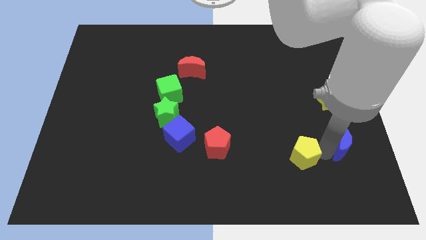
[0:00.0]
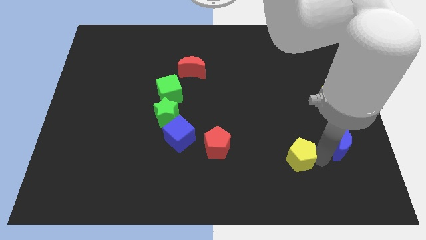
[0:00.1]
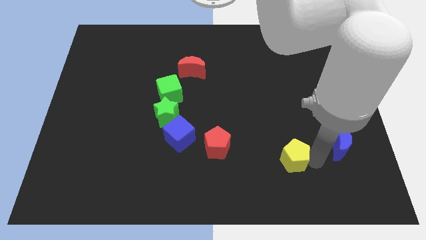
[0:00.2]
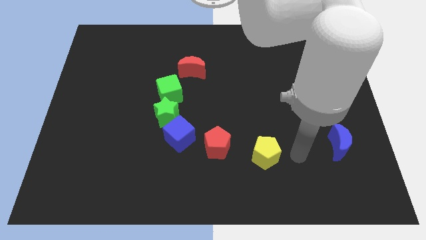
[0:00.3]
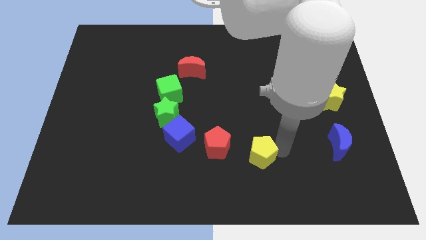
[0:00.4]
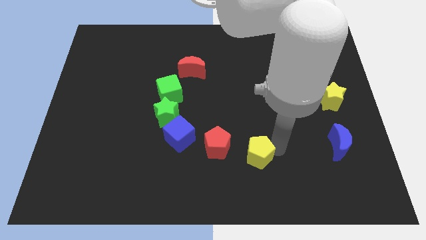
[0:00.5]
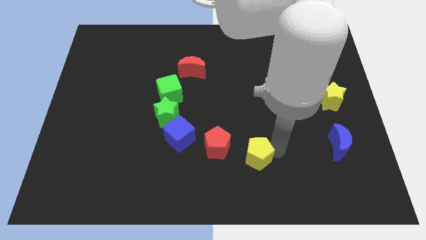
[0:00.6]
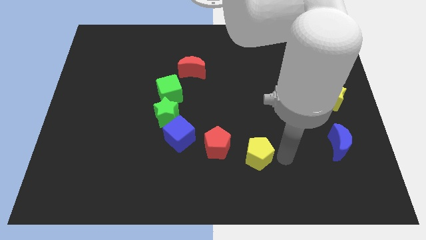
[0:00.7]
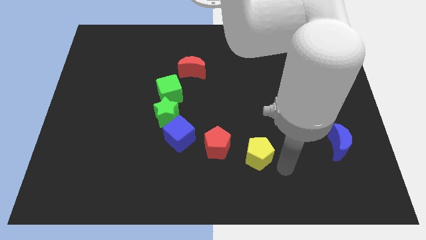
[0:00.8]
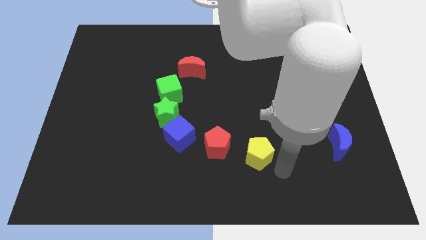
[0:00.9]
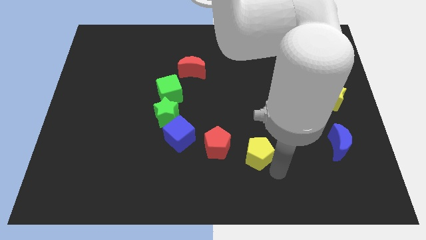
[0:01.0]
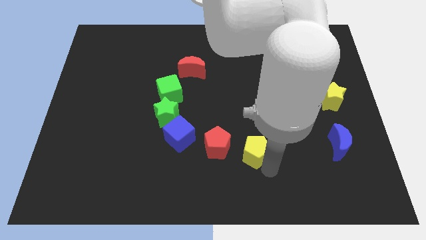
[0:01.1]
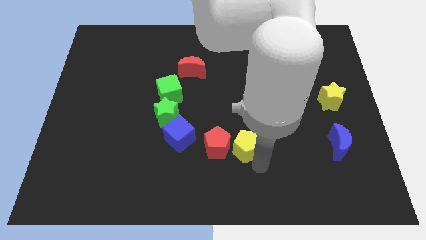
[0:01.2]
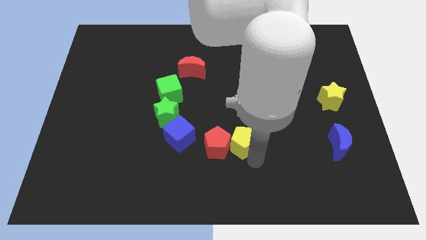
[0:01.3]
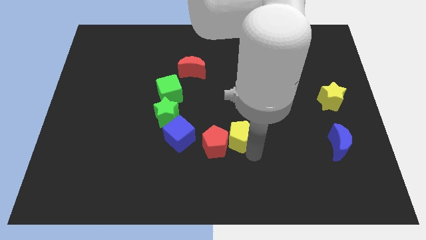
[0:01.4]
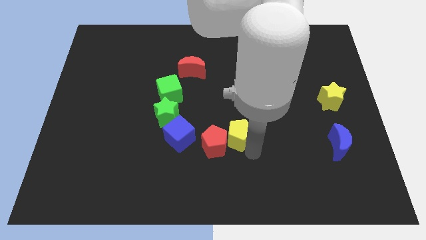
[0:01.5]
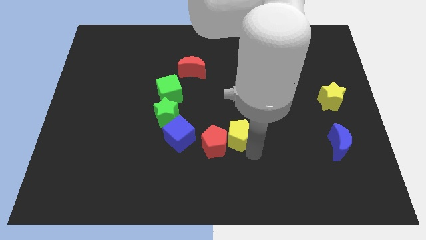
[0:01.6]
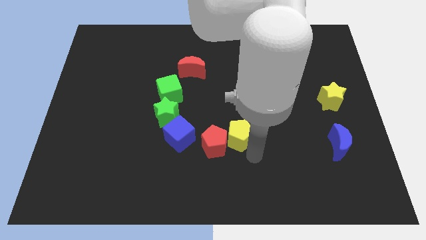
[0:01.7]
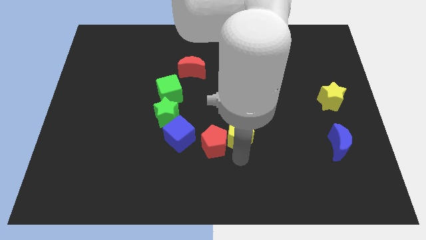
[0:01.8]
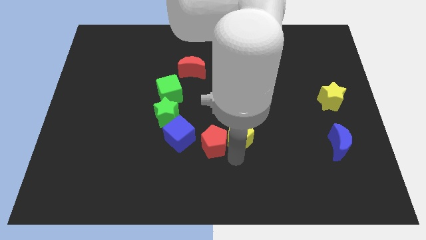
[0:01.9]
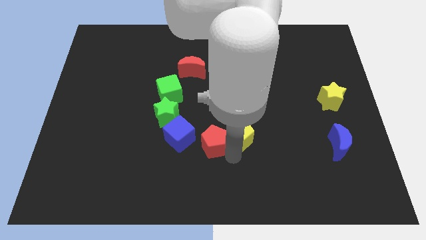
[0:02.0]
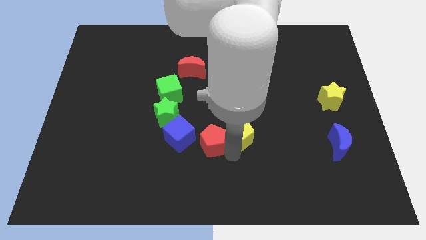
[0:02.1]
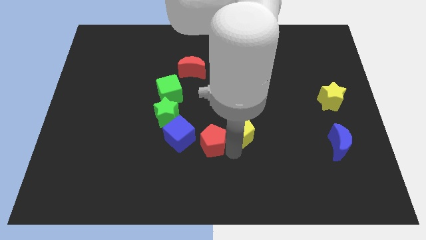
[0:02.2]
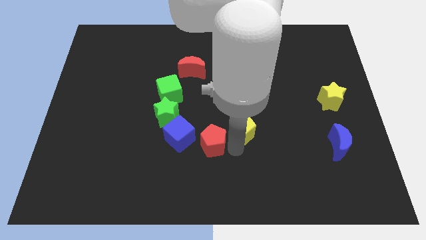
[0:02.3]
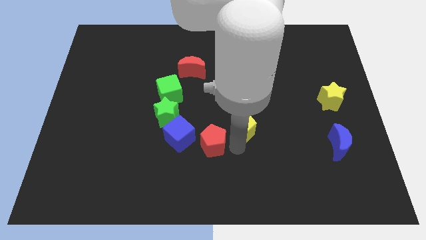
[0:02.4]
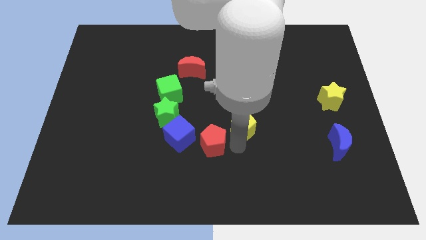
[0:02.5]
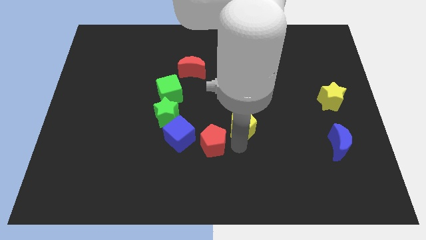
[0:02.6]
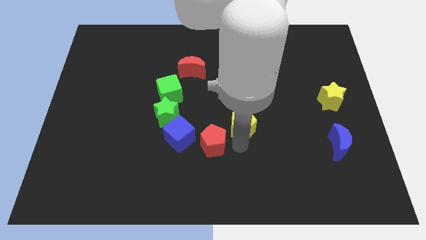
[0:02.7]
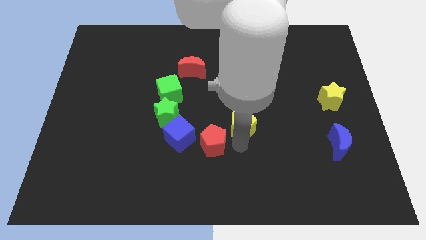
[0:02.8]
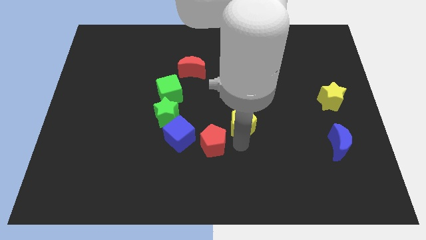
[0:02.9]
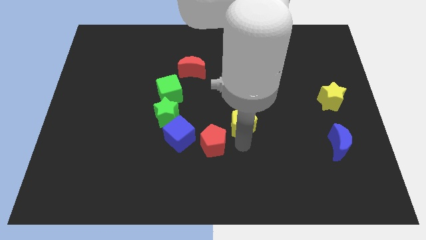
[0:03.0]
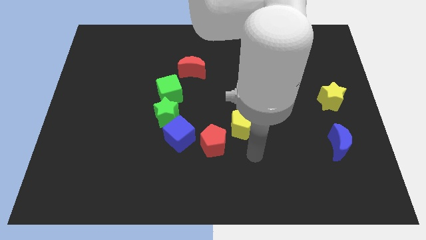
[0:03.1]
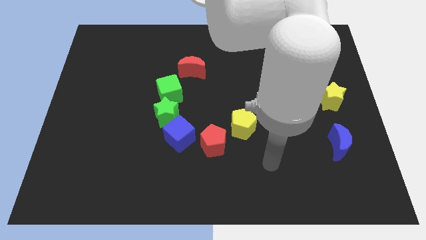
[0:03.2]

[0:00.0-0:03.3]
put yellow pentagon diagonally above red pentagon

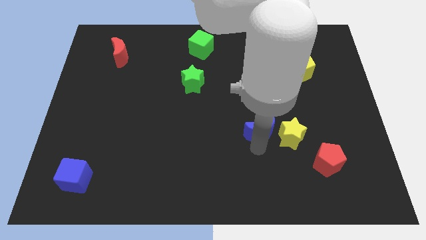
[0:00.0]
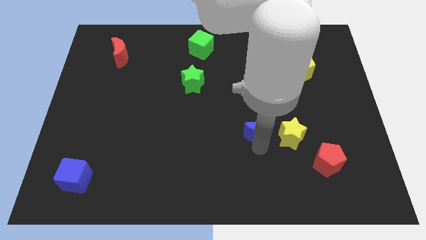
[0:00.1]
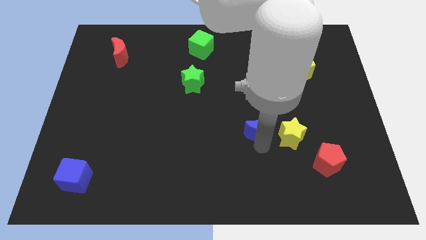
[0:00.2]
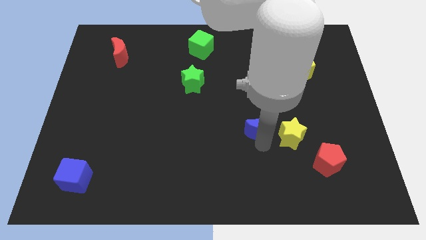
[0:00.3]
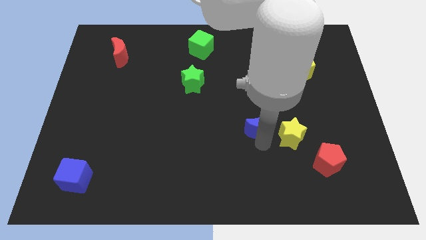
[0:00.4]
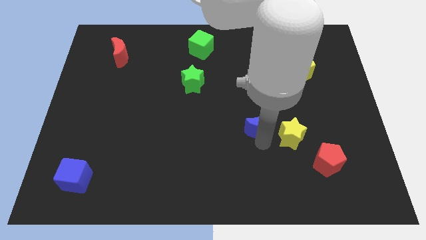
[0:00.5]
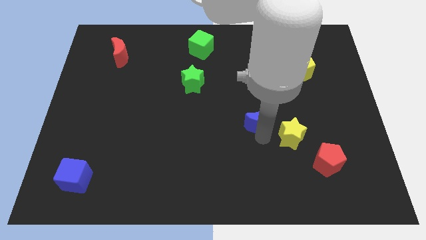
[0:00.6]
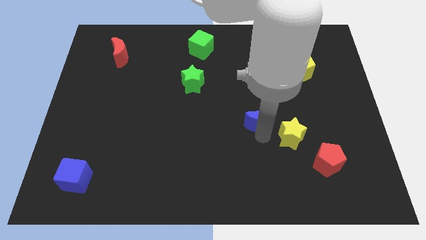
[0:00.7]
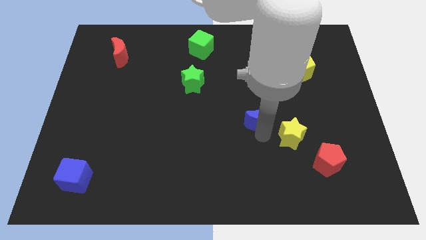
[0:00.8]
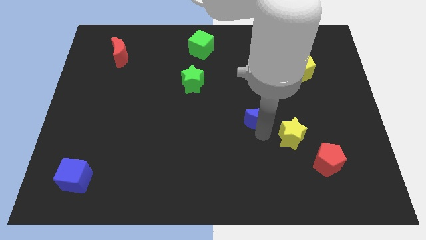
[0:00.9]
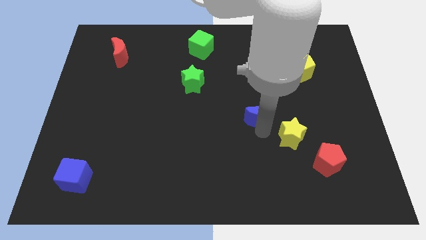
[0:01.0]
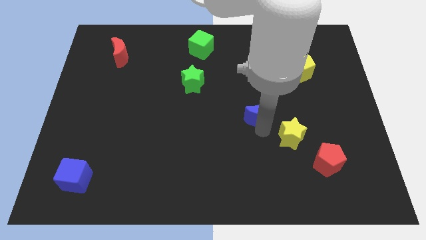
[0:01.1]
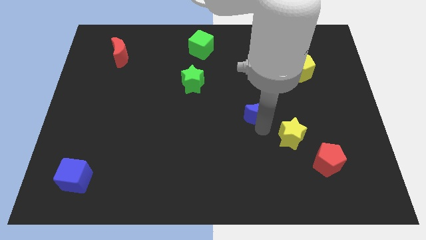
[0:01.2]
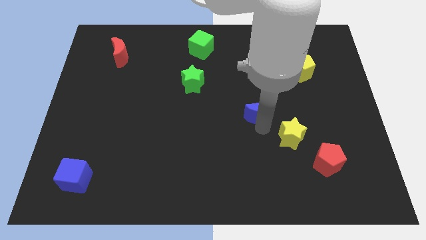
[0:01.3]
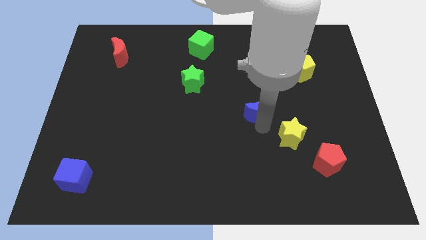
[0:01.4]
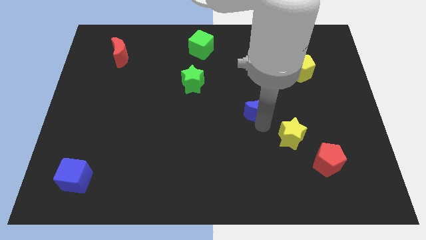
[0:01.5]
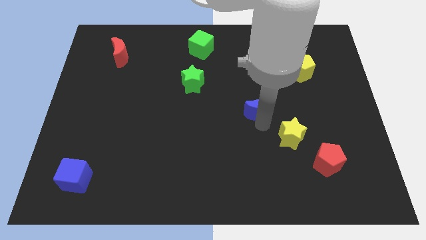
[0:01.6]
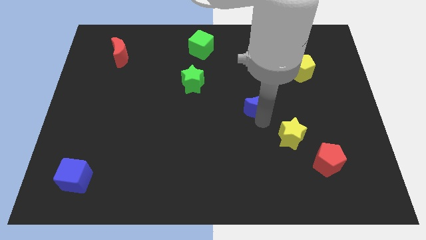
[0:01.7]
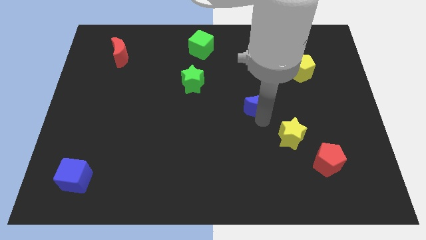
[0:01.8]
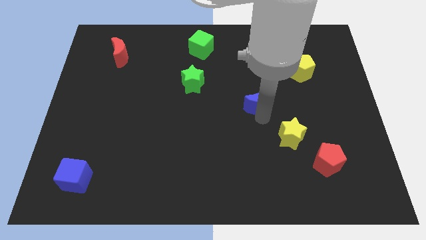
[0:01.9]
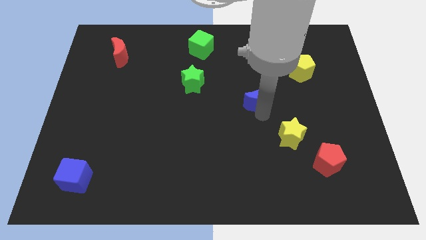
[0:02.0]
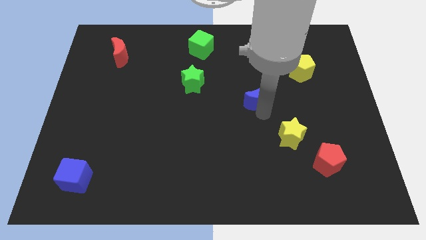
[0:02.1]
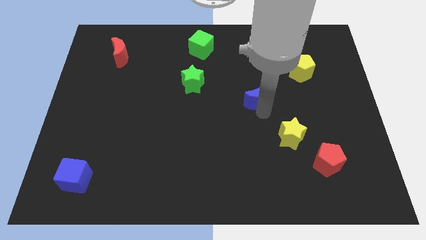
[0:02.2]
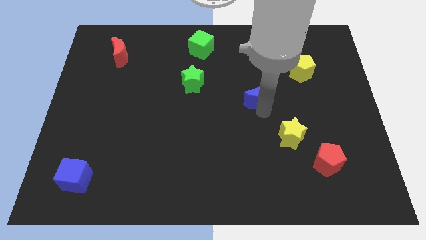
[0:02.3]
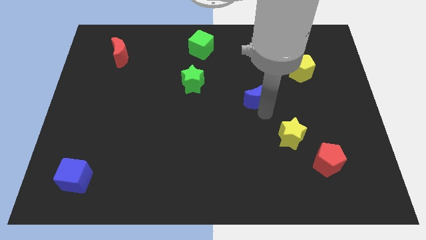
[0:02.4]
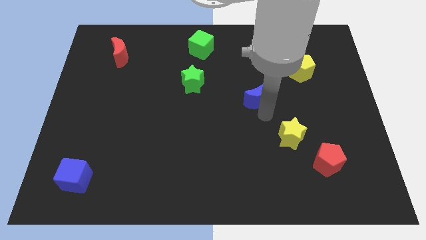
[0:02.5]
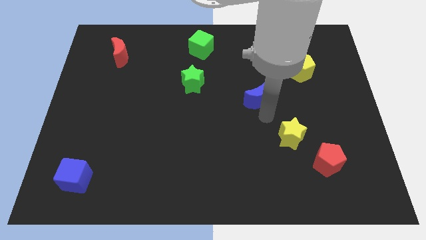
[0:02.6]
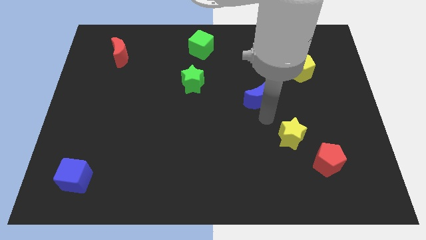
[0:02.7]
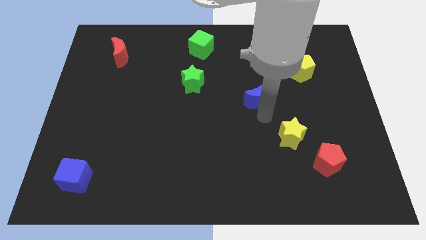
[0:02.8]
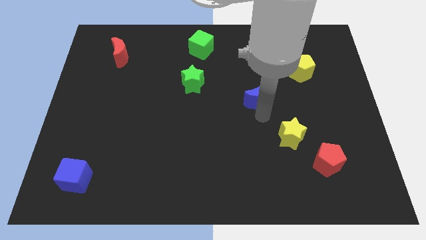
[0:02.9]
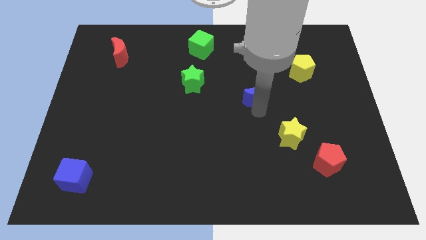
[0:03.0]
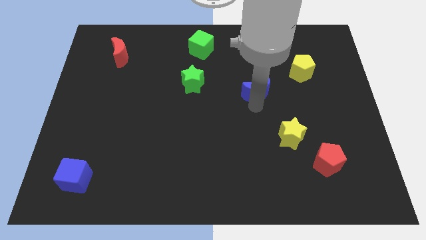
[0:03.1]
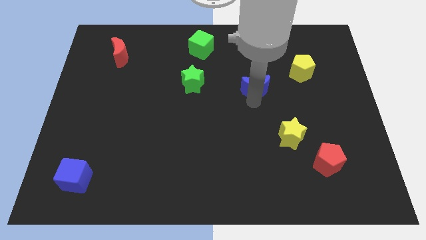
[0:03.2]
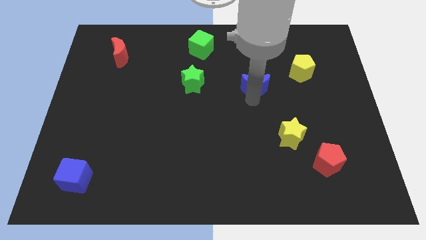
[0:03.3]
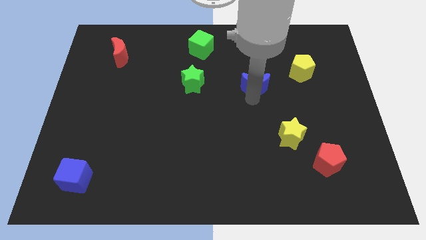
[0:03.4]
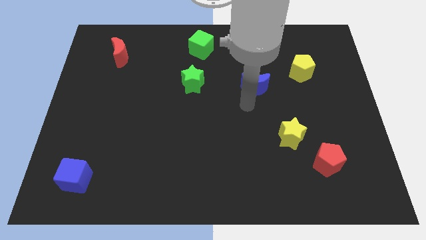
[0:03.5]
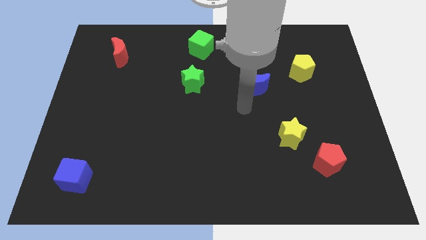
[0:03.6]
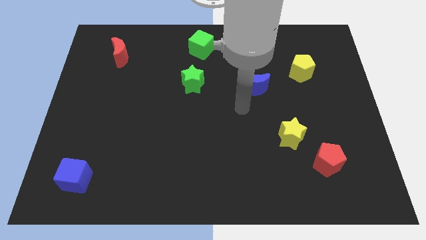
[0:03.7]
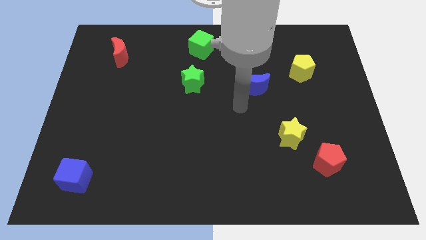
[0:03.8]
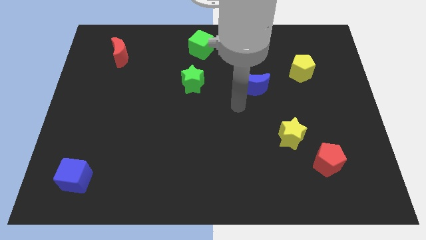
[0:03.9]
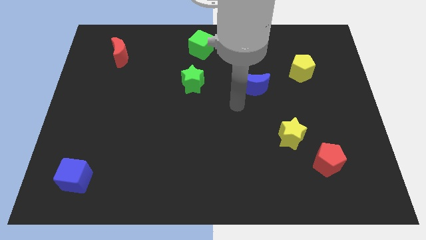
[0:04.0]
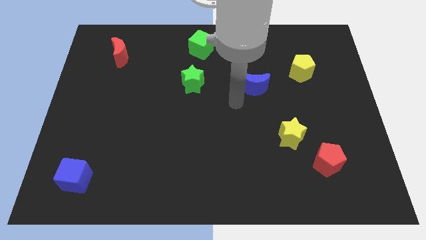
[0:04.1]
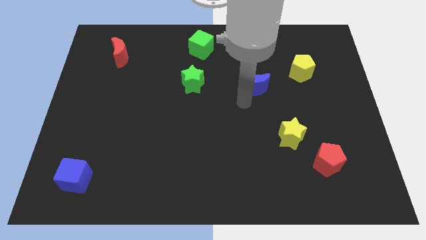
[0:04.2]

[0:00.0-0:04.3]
place the blue moon right to the green star

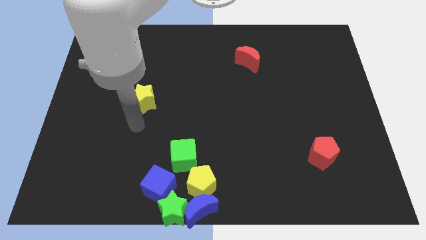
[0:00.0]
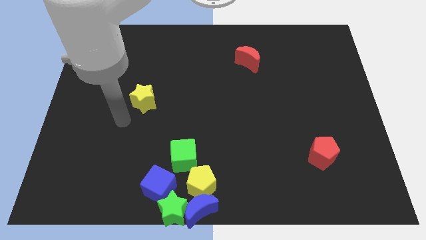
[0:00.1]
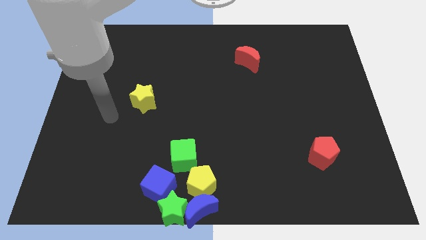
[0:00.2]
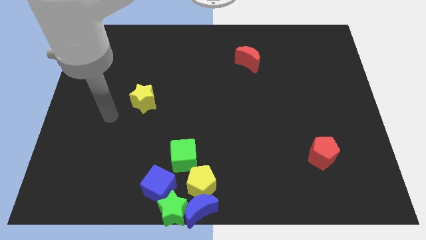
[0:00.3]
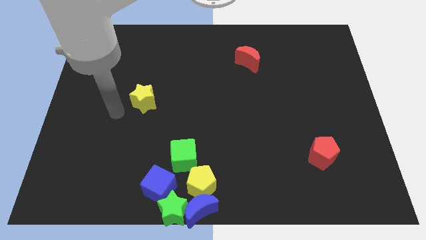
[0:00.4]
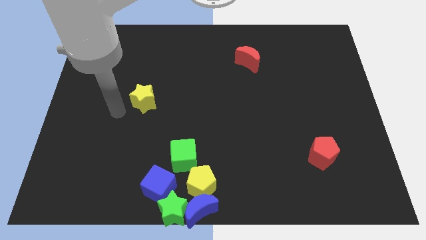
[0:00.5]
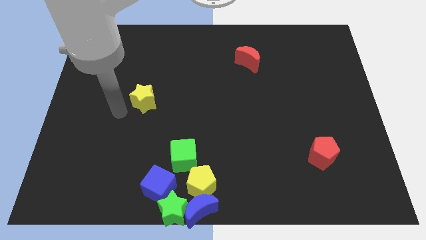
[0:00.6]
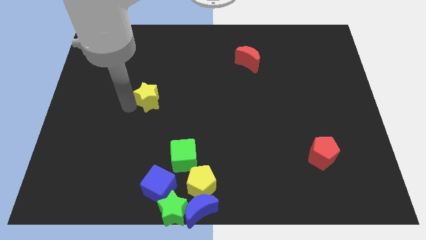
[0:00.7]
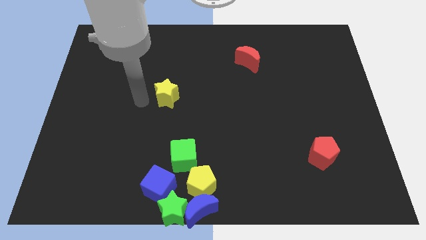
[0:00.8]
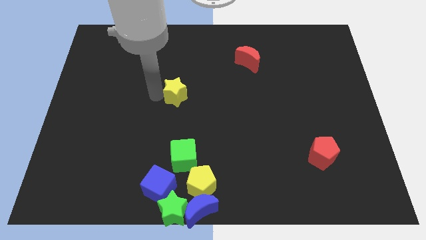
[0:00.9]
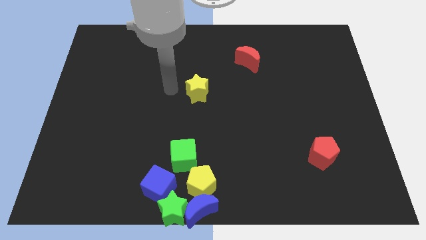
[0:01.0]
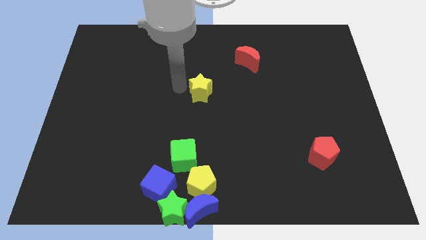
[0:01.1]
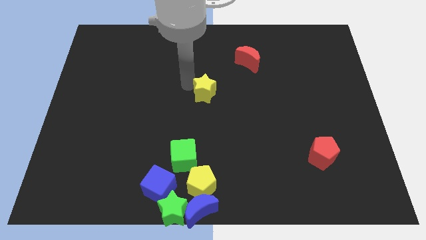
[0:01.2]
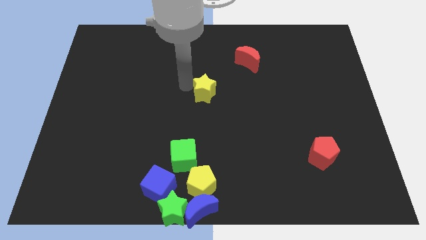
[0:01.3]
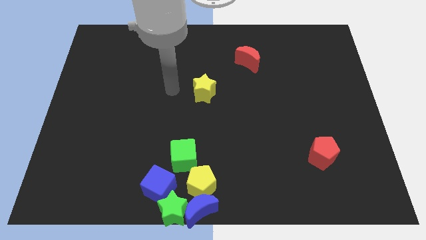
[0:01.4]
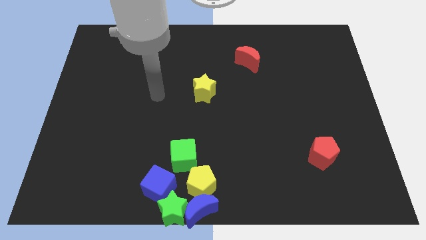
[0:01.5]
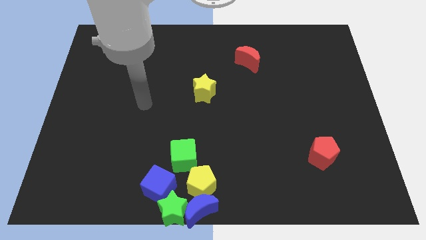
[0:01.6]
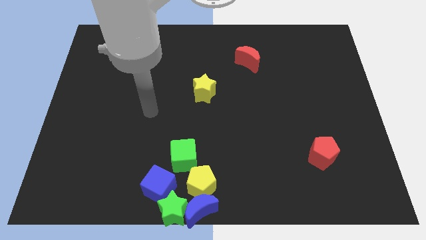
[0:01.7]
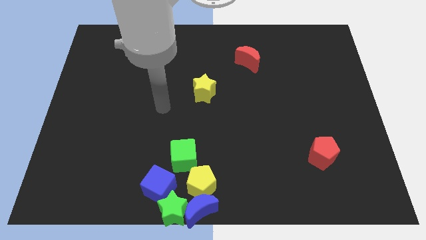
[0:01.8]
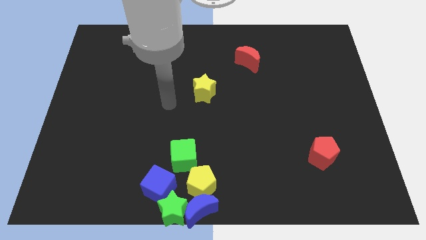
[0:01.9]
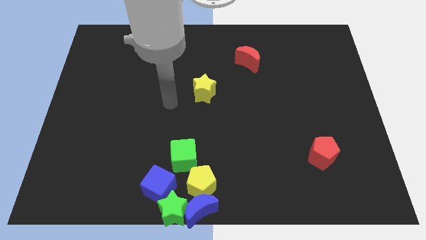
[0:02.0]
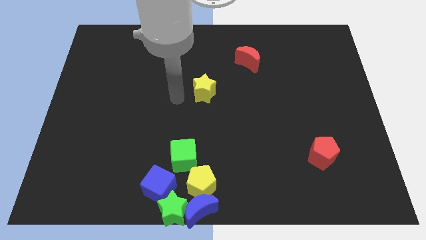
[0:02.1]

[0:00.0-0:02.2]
push the yellow star to the top right of the green cube
